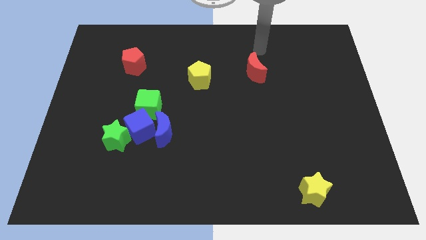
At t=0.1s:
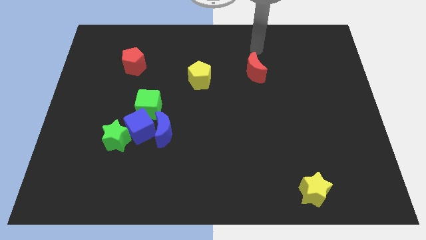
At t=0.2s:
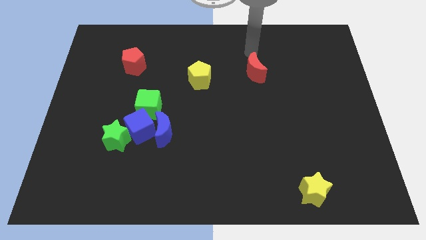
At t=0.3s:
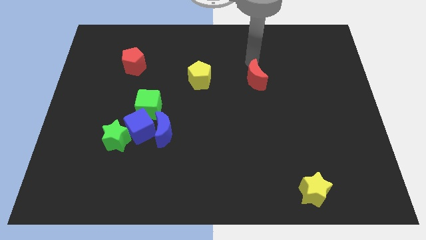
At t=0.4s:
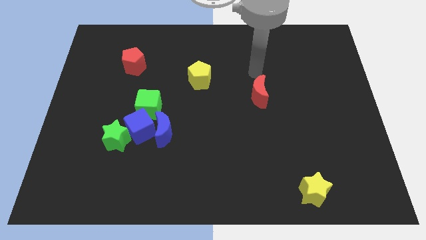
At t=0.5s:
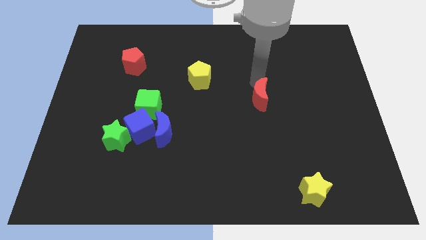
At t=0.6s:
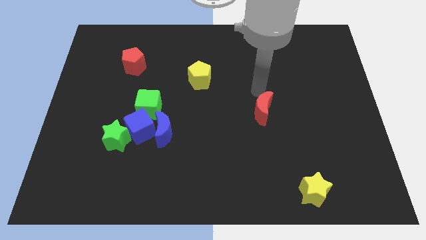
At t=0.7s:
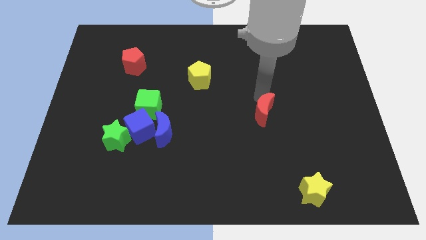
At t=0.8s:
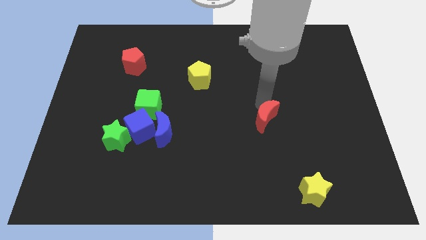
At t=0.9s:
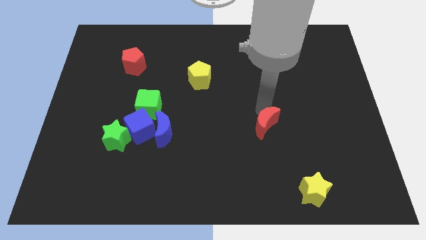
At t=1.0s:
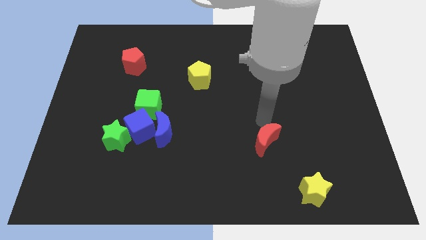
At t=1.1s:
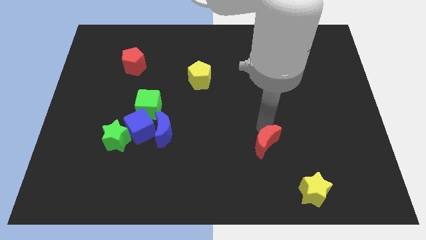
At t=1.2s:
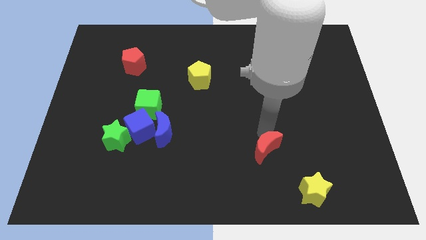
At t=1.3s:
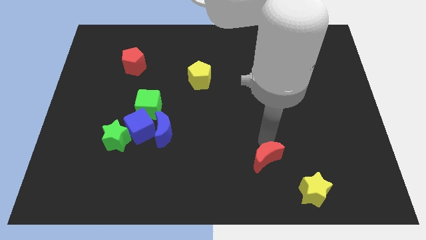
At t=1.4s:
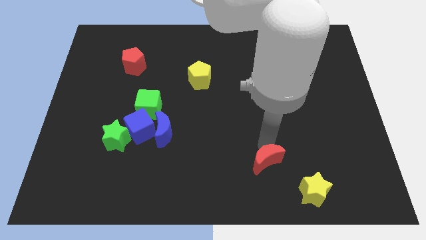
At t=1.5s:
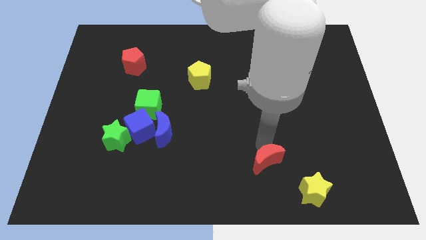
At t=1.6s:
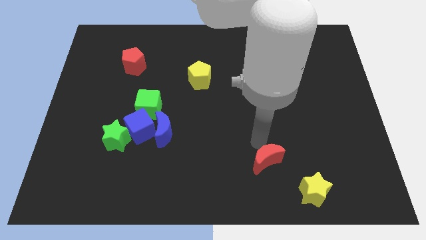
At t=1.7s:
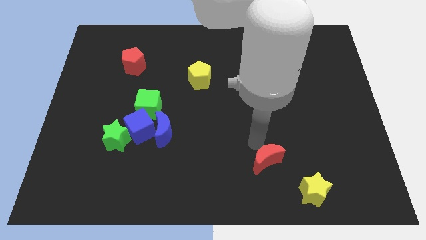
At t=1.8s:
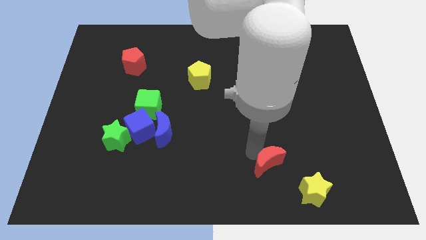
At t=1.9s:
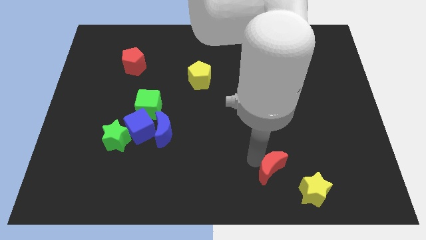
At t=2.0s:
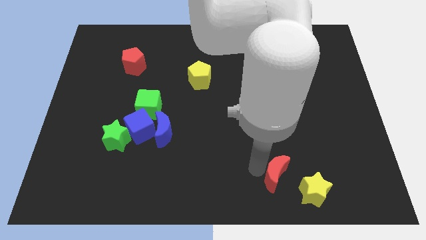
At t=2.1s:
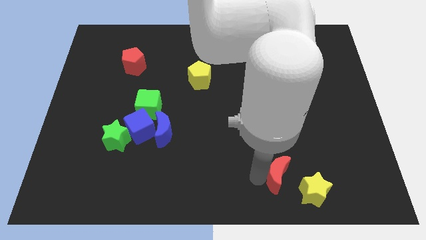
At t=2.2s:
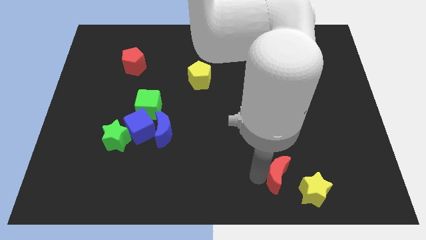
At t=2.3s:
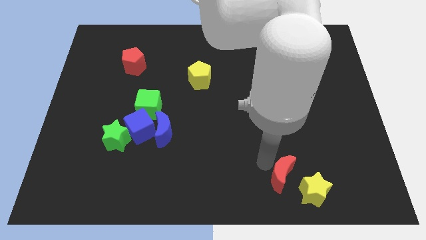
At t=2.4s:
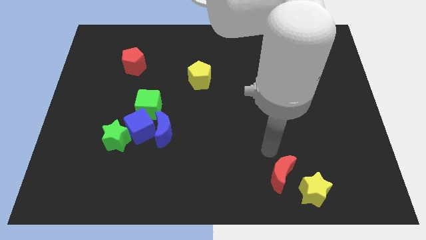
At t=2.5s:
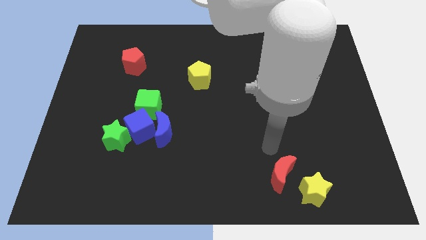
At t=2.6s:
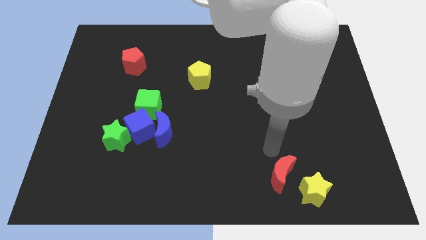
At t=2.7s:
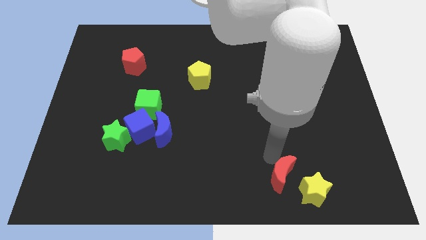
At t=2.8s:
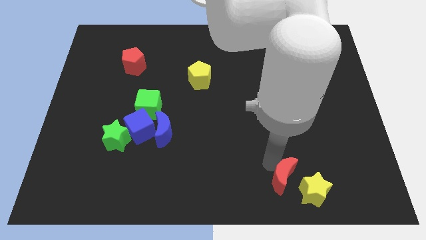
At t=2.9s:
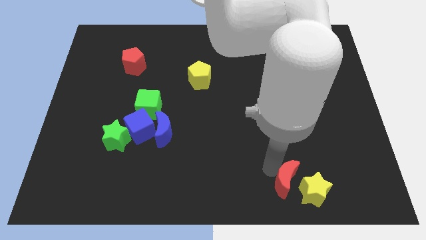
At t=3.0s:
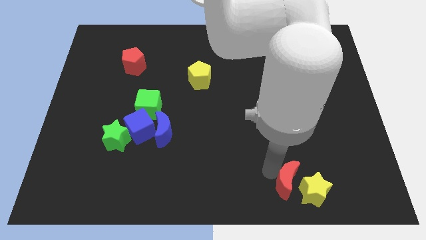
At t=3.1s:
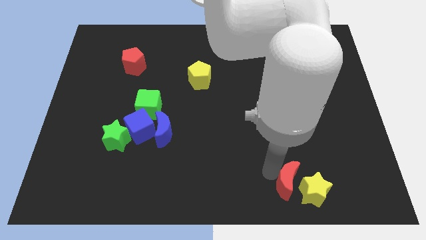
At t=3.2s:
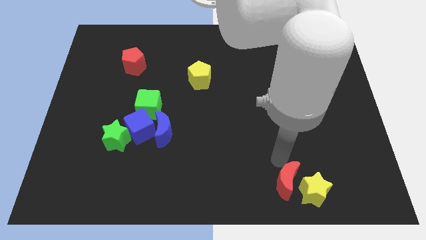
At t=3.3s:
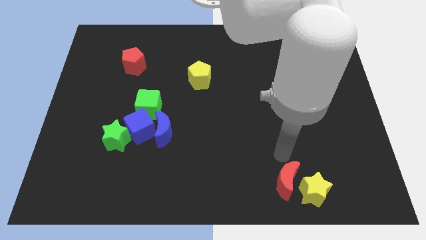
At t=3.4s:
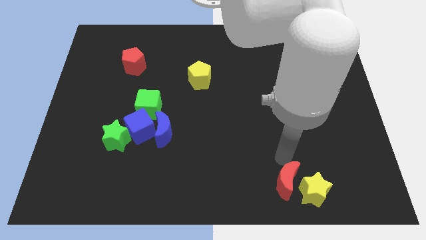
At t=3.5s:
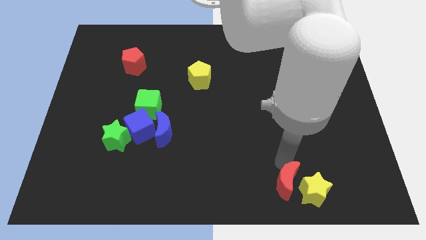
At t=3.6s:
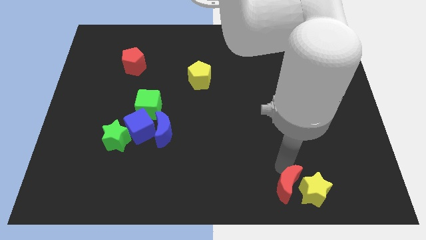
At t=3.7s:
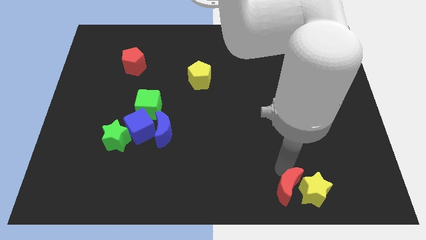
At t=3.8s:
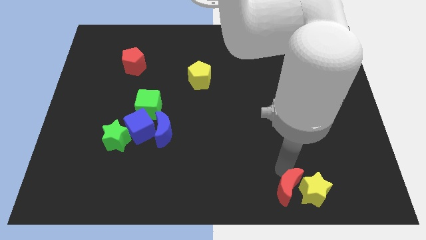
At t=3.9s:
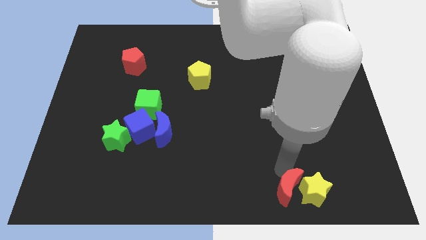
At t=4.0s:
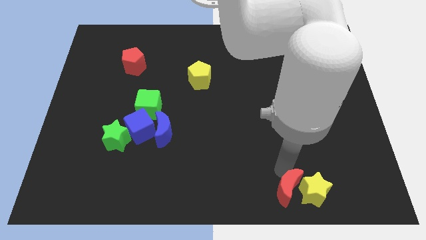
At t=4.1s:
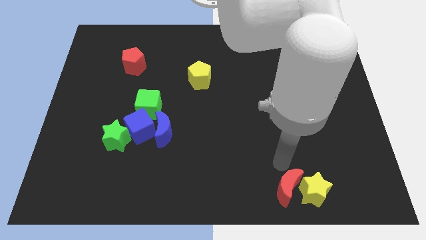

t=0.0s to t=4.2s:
place red moon to the top left of yellow star

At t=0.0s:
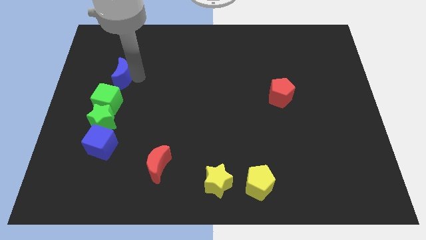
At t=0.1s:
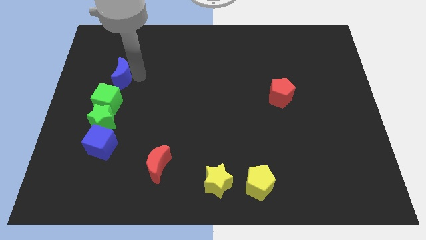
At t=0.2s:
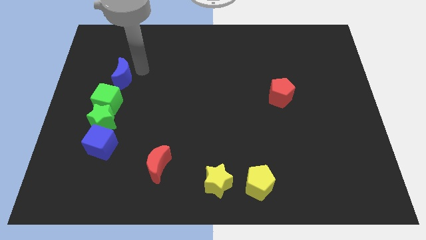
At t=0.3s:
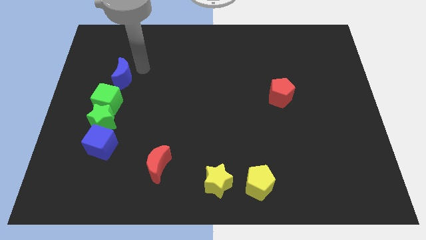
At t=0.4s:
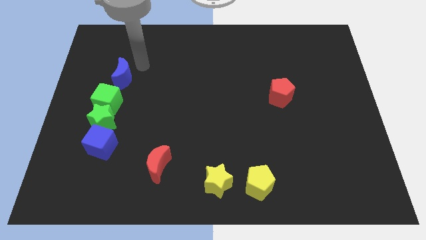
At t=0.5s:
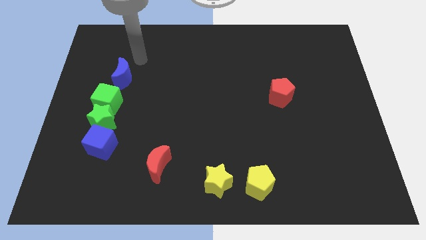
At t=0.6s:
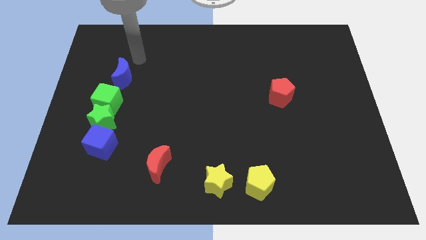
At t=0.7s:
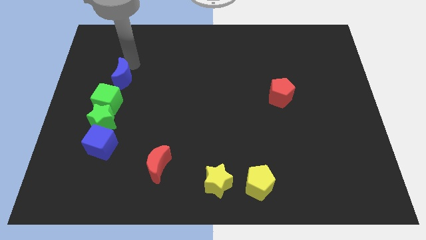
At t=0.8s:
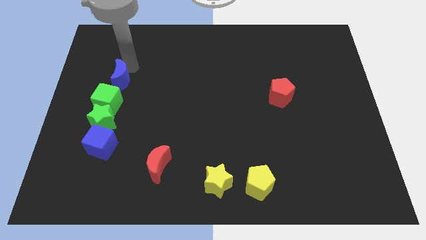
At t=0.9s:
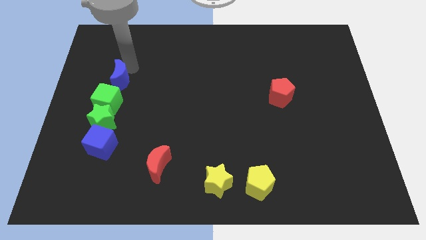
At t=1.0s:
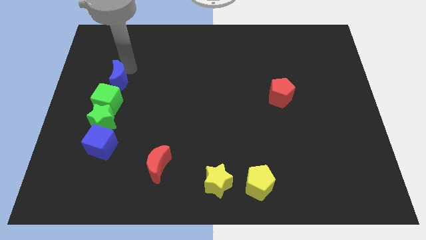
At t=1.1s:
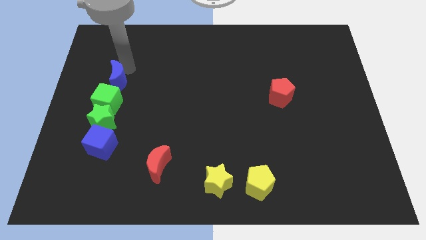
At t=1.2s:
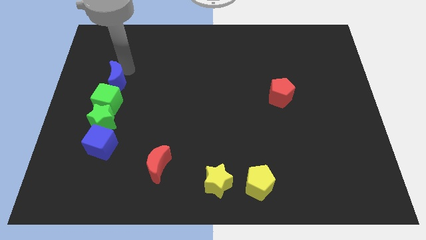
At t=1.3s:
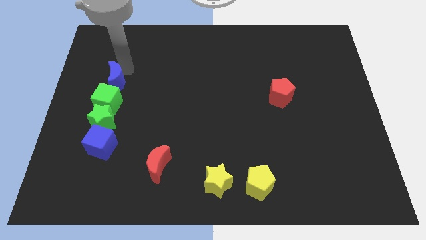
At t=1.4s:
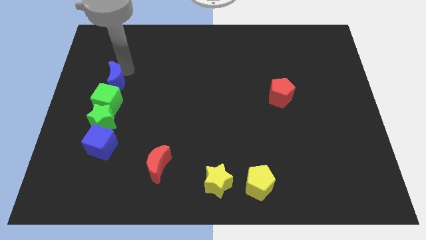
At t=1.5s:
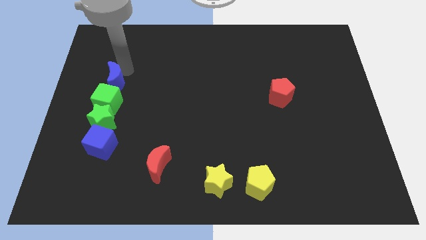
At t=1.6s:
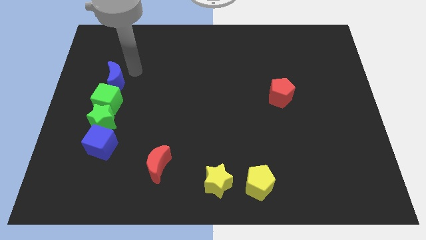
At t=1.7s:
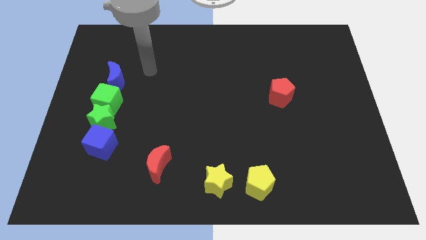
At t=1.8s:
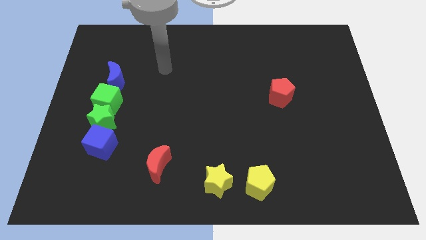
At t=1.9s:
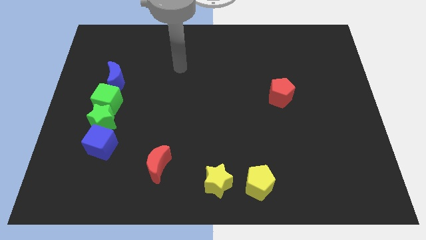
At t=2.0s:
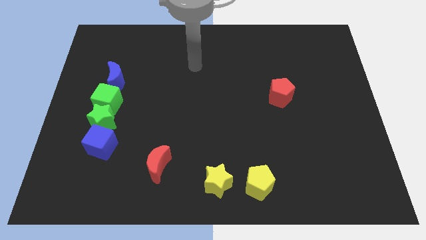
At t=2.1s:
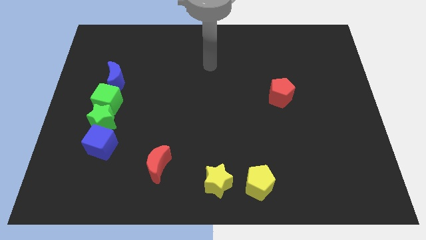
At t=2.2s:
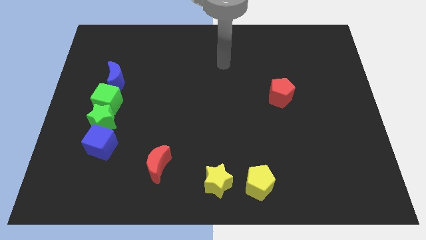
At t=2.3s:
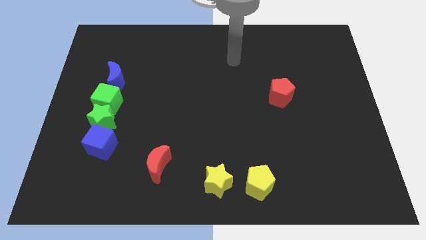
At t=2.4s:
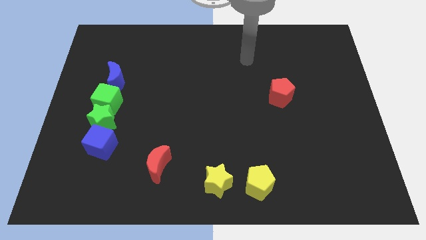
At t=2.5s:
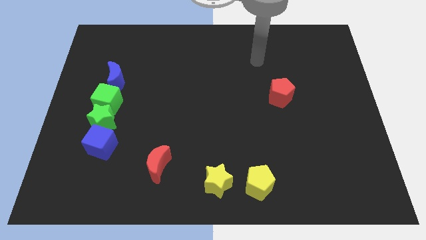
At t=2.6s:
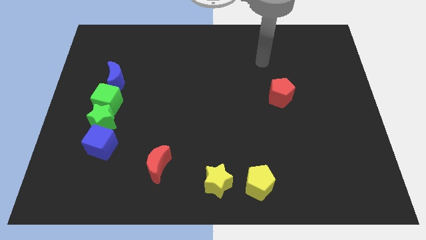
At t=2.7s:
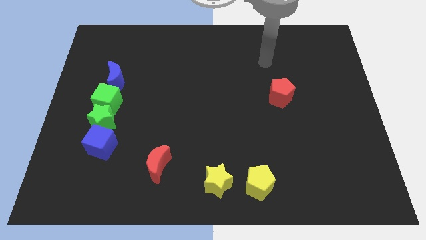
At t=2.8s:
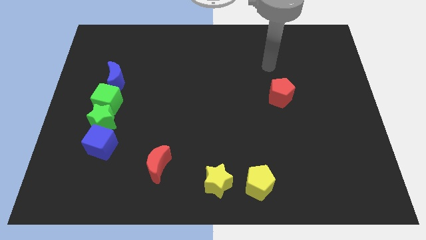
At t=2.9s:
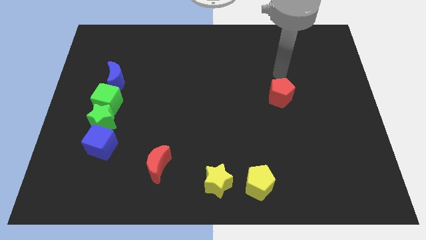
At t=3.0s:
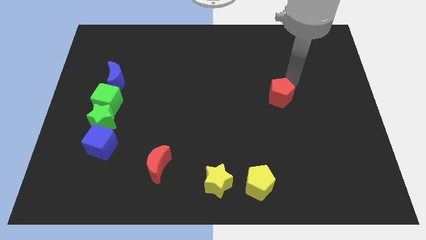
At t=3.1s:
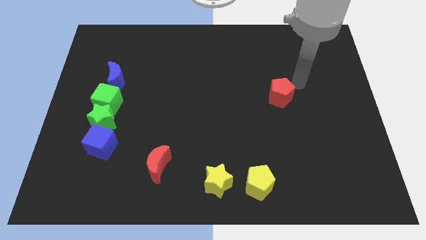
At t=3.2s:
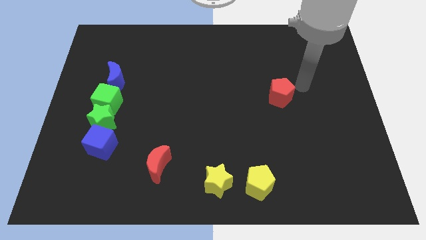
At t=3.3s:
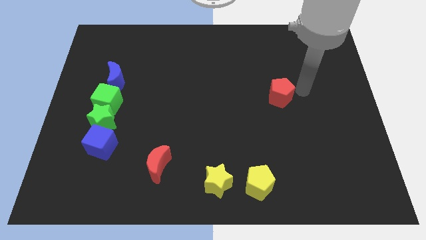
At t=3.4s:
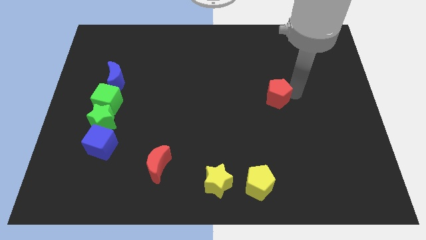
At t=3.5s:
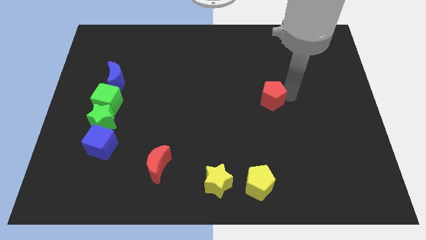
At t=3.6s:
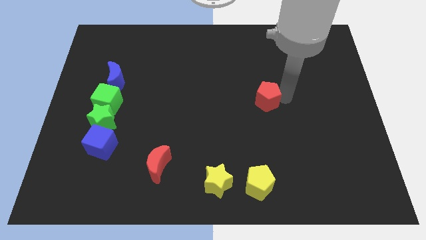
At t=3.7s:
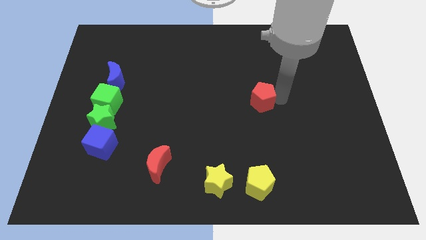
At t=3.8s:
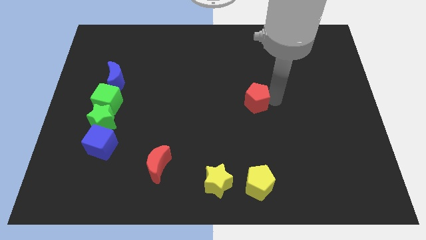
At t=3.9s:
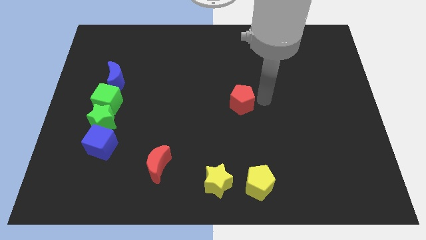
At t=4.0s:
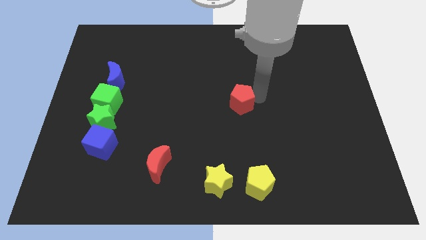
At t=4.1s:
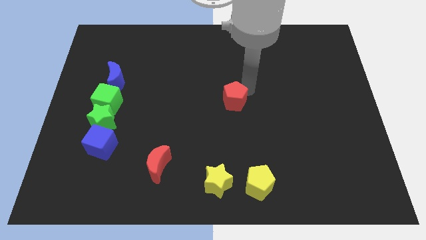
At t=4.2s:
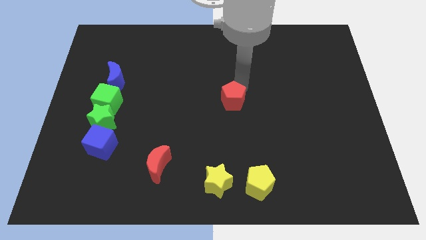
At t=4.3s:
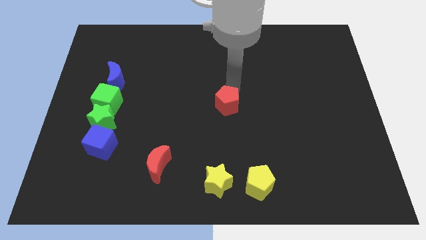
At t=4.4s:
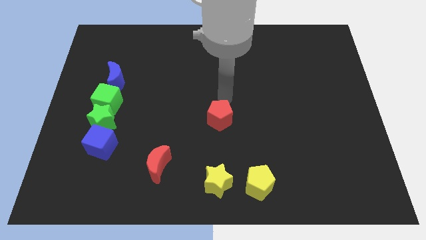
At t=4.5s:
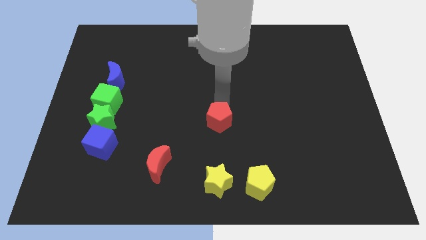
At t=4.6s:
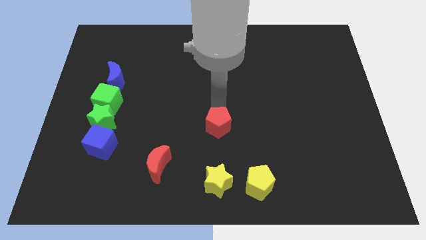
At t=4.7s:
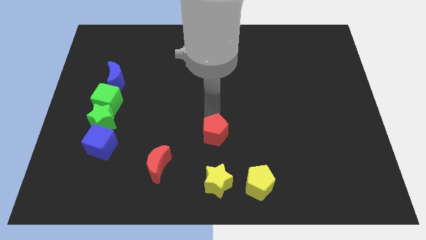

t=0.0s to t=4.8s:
put the red pentagon vertically above the yellow star
